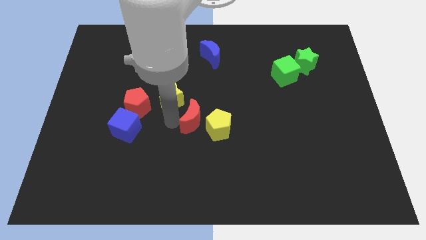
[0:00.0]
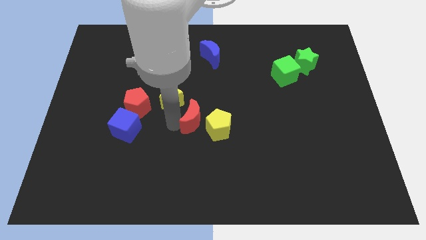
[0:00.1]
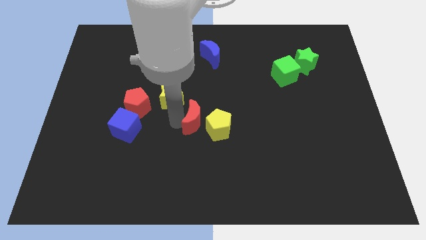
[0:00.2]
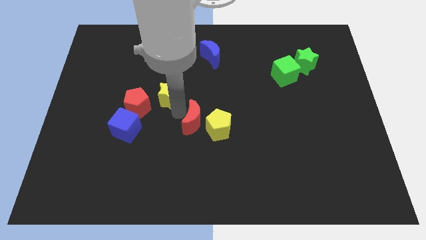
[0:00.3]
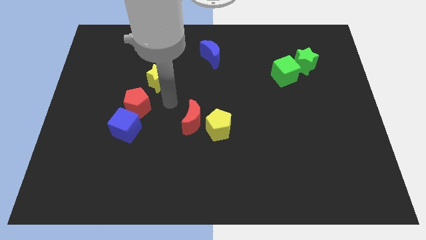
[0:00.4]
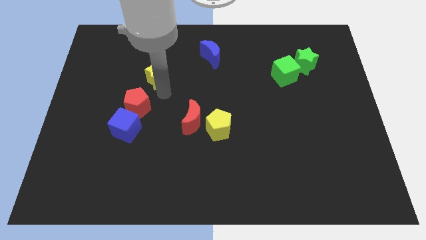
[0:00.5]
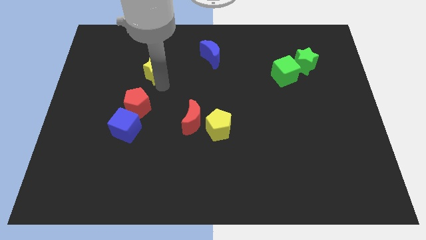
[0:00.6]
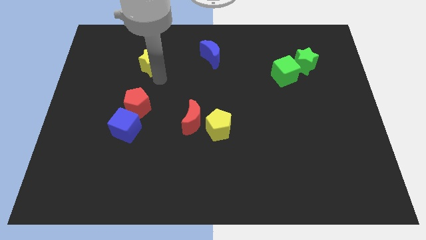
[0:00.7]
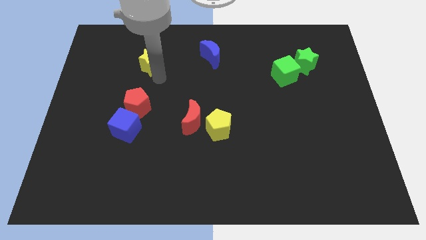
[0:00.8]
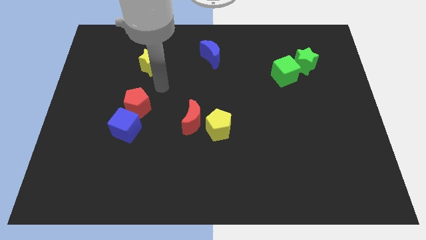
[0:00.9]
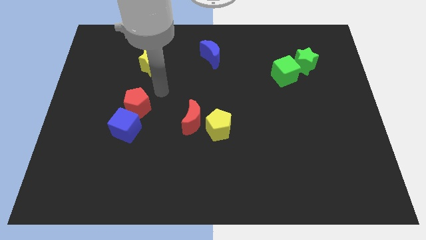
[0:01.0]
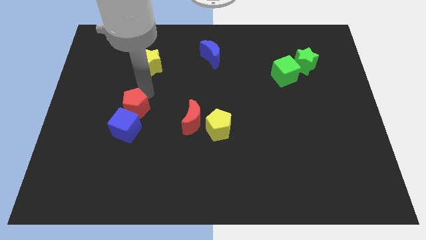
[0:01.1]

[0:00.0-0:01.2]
move the yellow star to the horizontal left of the blue moon

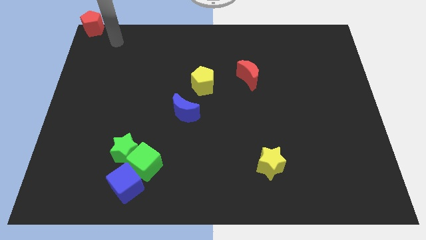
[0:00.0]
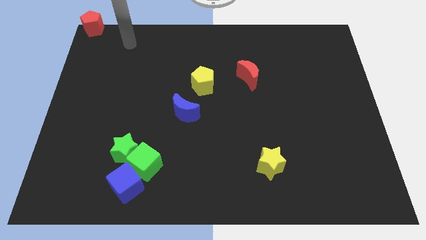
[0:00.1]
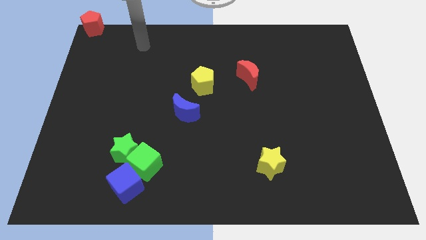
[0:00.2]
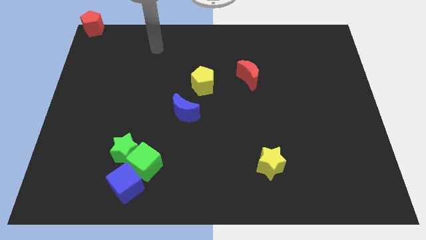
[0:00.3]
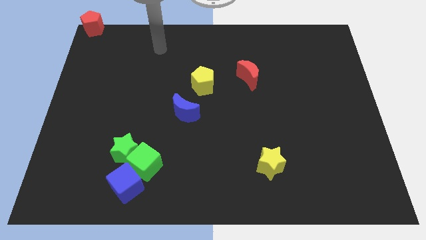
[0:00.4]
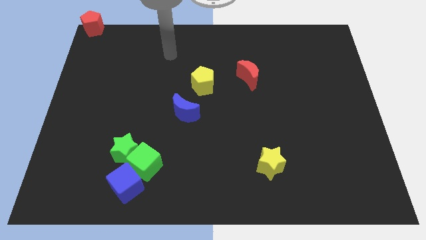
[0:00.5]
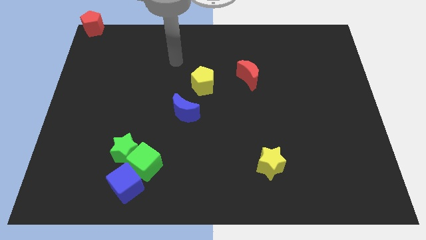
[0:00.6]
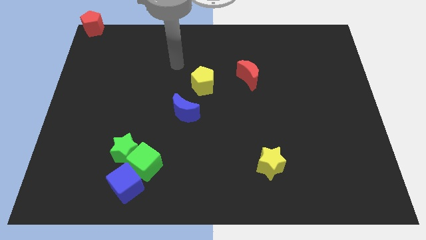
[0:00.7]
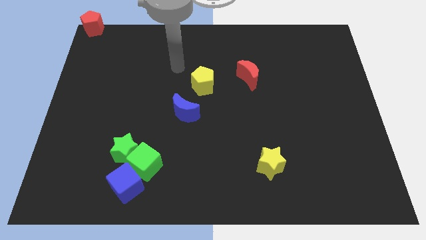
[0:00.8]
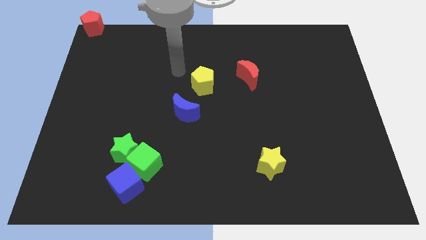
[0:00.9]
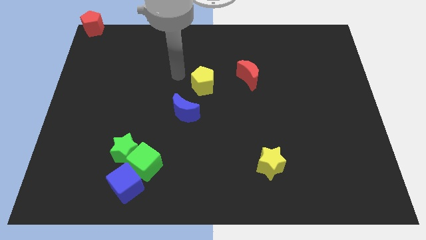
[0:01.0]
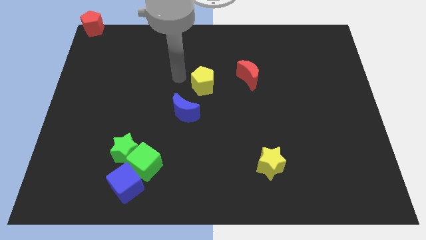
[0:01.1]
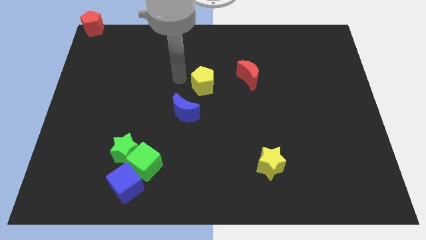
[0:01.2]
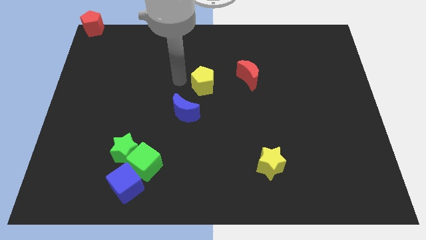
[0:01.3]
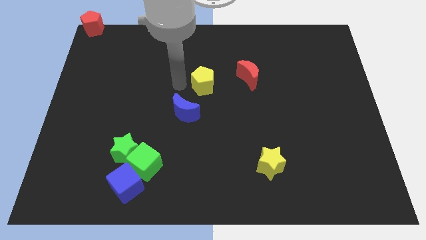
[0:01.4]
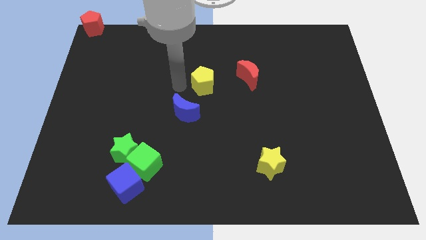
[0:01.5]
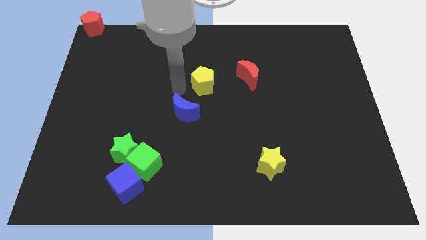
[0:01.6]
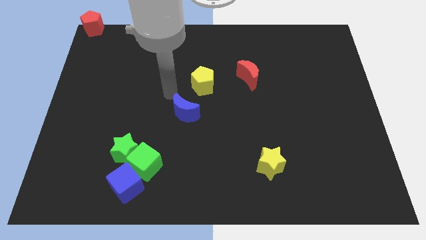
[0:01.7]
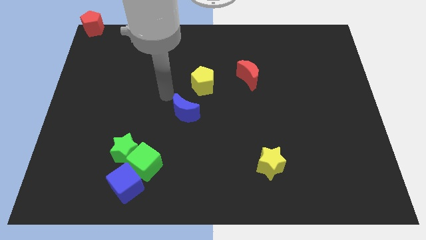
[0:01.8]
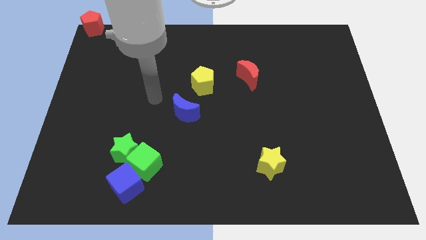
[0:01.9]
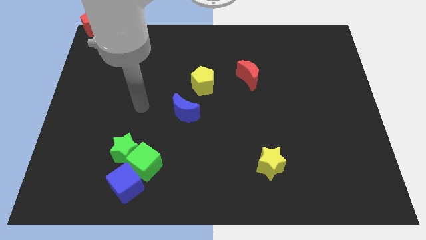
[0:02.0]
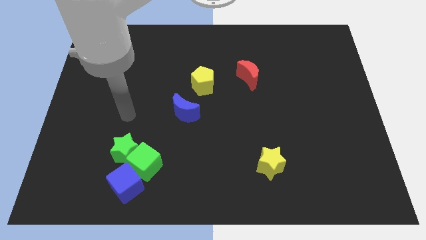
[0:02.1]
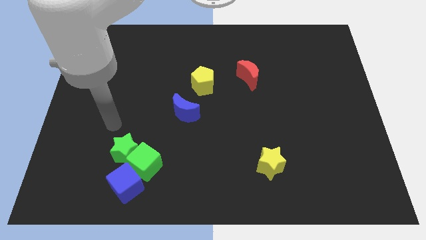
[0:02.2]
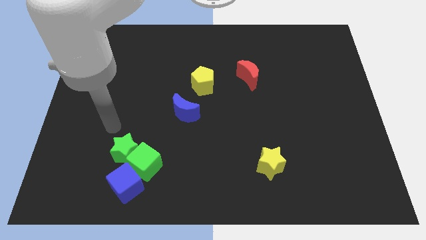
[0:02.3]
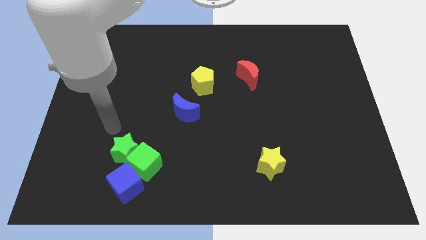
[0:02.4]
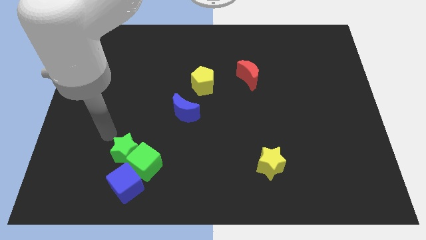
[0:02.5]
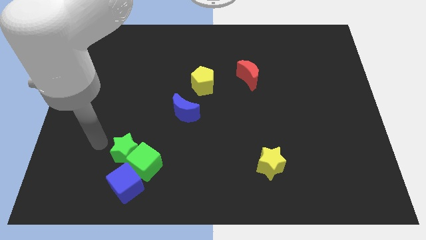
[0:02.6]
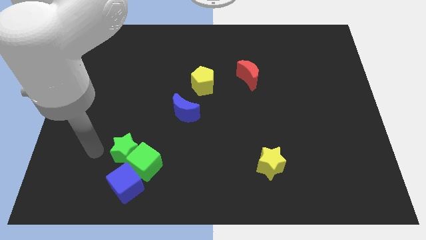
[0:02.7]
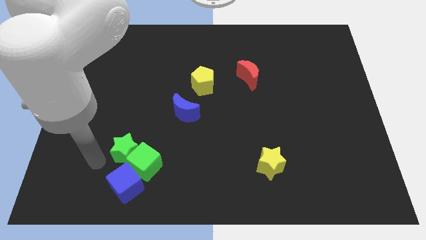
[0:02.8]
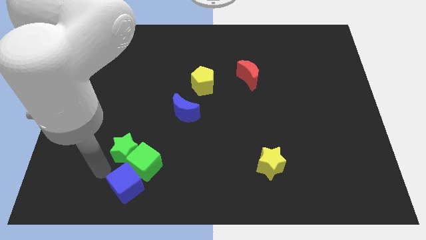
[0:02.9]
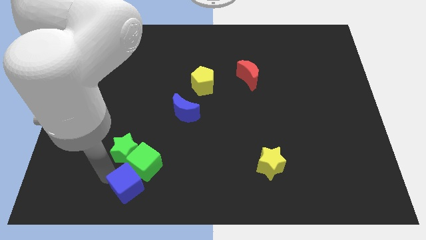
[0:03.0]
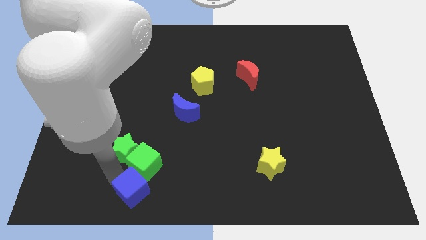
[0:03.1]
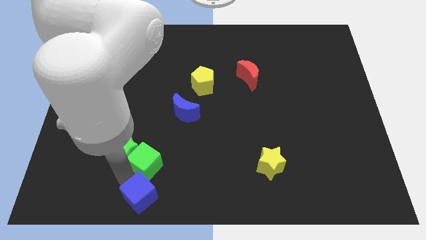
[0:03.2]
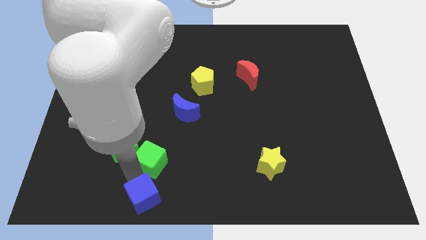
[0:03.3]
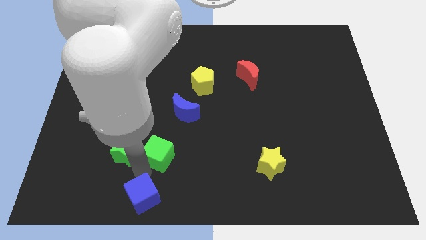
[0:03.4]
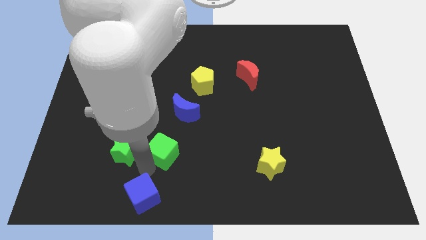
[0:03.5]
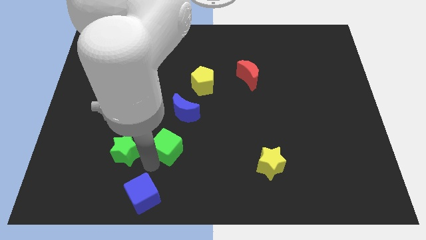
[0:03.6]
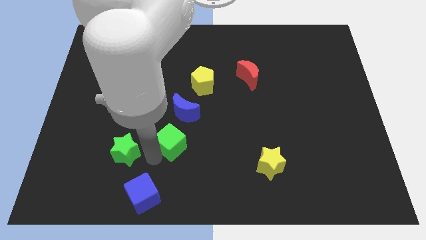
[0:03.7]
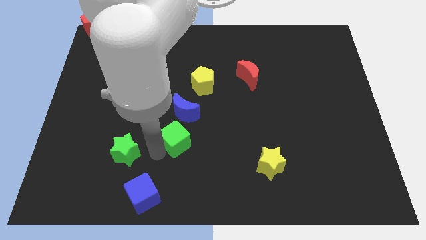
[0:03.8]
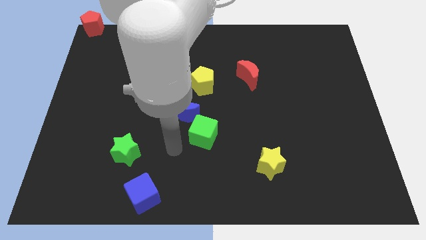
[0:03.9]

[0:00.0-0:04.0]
separate the cubes

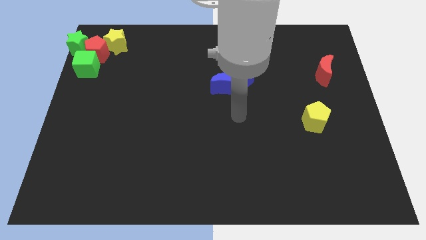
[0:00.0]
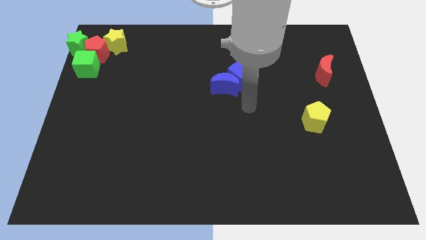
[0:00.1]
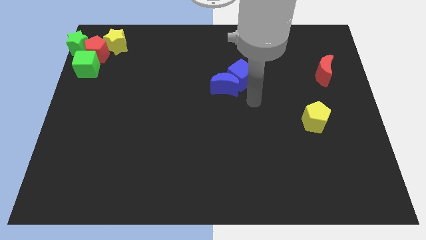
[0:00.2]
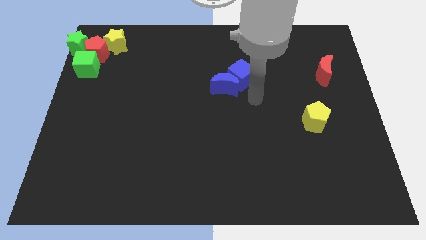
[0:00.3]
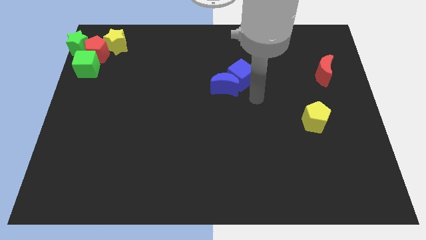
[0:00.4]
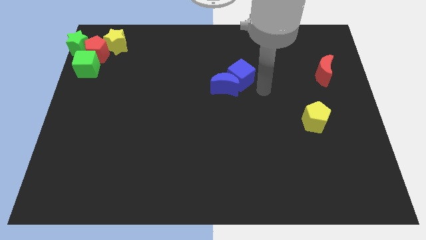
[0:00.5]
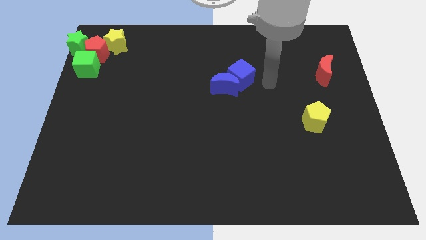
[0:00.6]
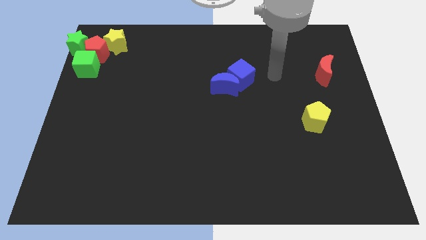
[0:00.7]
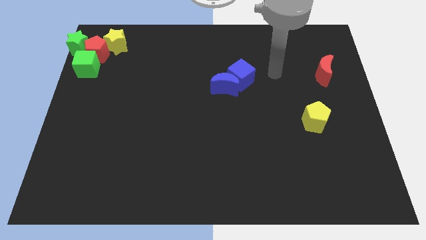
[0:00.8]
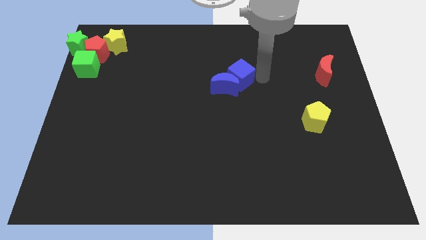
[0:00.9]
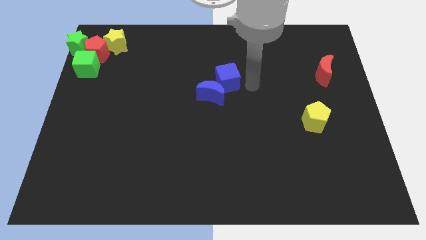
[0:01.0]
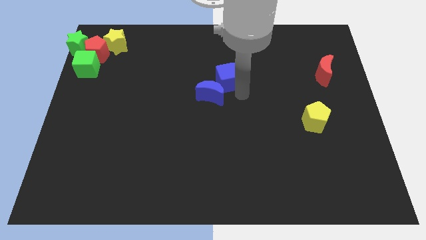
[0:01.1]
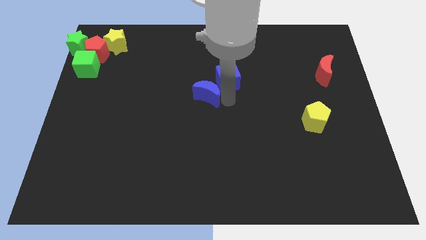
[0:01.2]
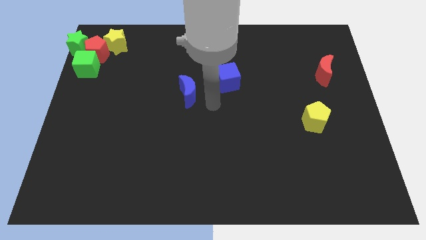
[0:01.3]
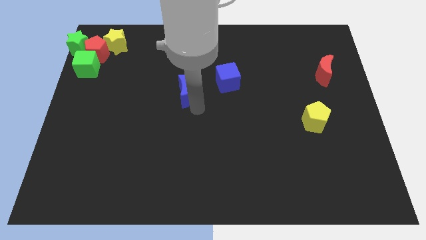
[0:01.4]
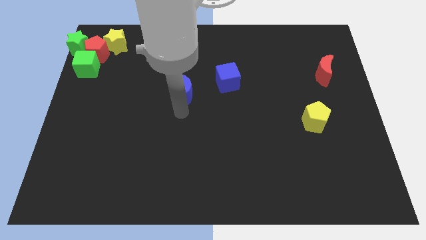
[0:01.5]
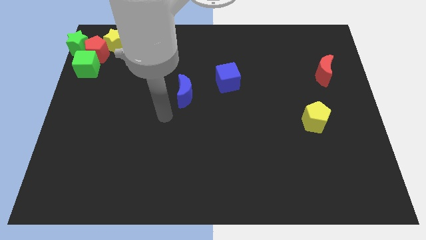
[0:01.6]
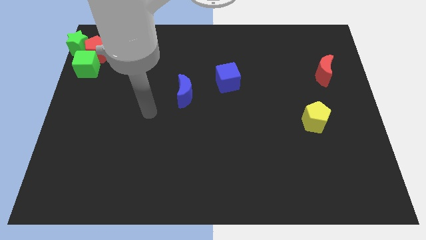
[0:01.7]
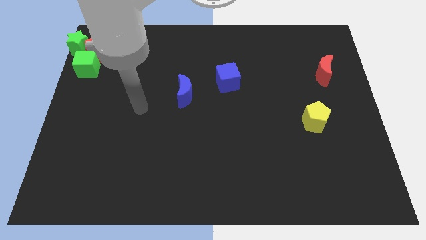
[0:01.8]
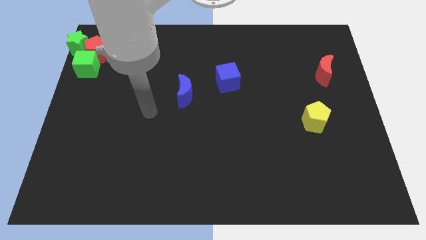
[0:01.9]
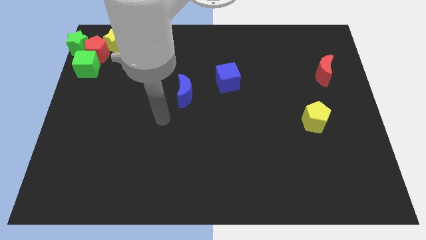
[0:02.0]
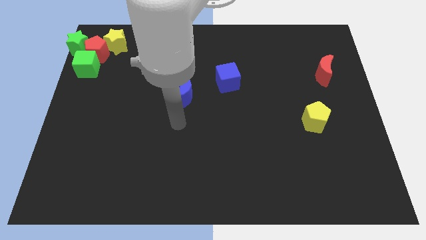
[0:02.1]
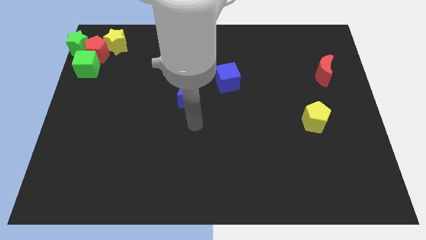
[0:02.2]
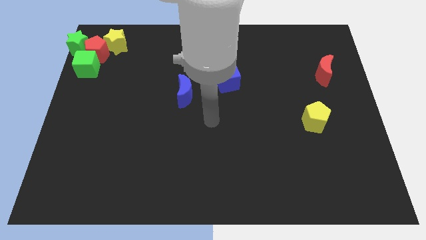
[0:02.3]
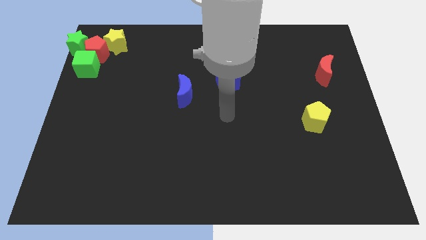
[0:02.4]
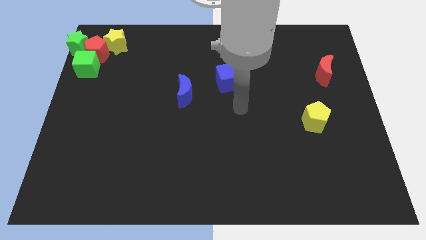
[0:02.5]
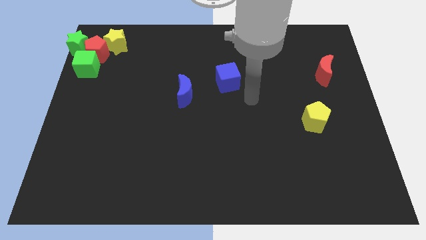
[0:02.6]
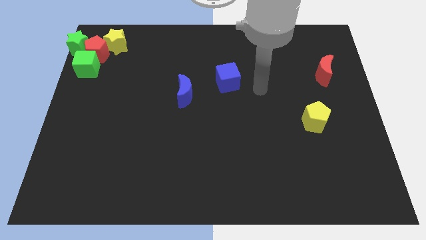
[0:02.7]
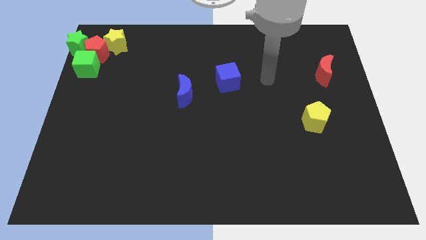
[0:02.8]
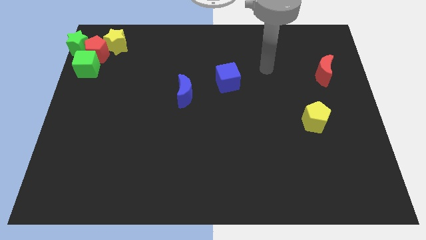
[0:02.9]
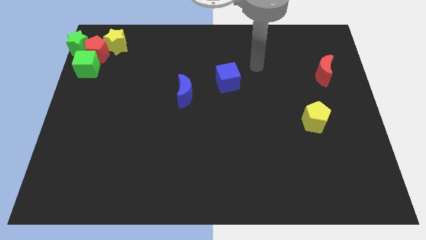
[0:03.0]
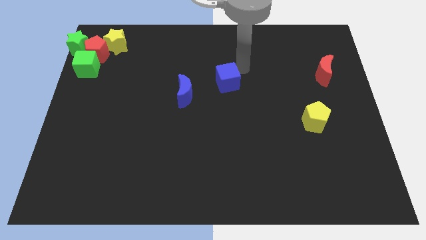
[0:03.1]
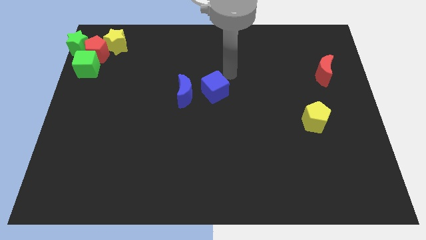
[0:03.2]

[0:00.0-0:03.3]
separate the blue crescent and the blue cube

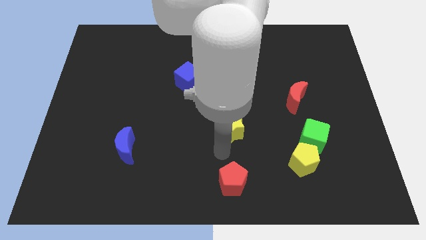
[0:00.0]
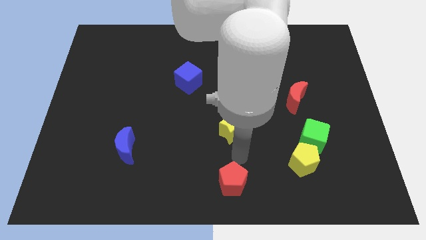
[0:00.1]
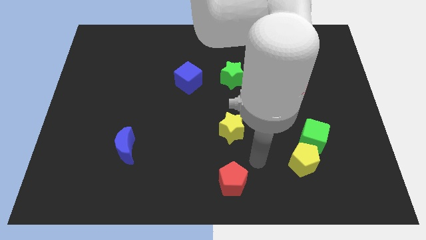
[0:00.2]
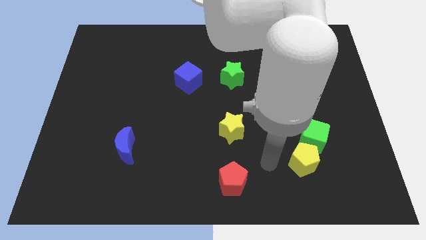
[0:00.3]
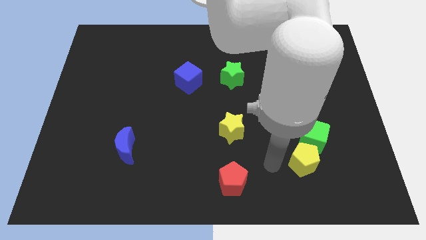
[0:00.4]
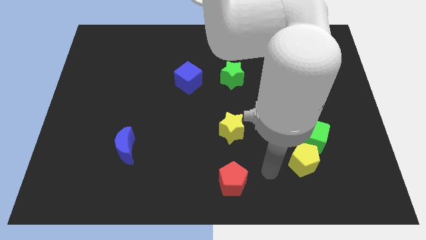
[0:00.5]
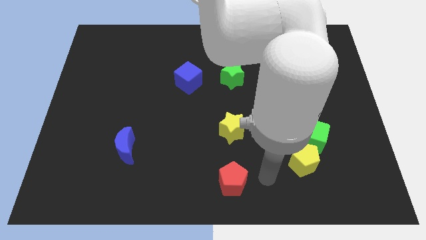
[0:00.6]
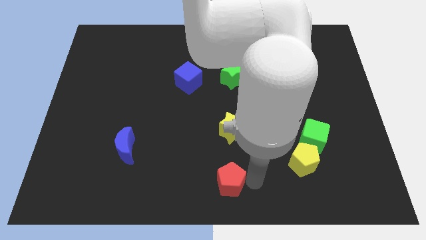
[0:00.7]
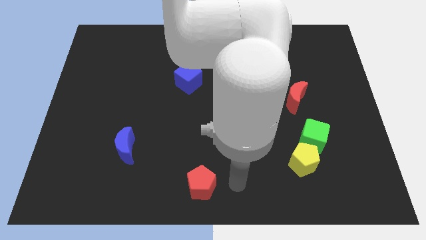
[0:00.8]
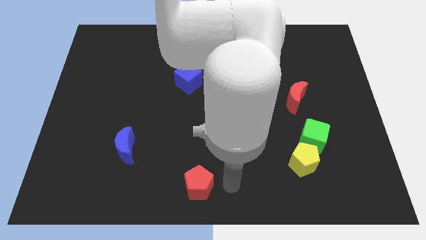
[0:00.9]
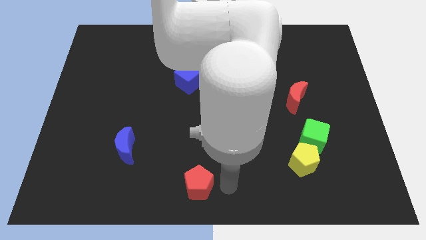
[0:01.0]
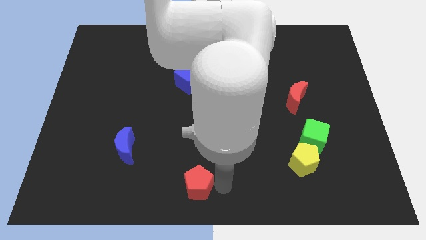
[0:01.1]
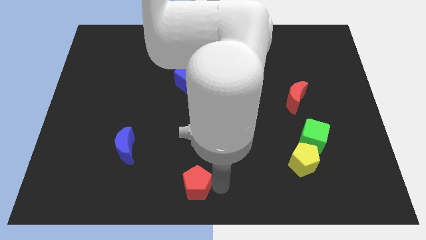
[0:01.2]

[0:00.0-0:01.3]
move the red pentagon slightly left
